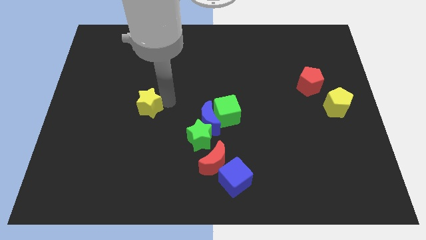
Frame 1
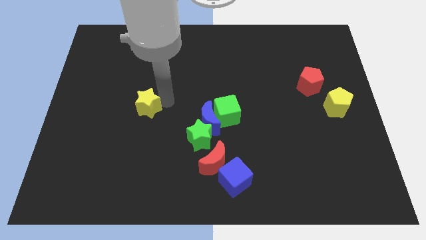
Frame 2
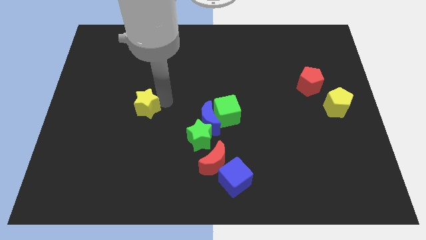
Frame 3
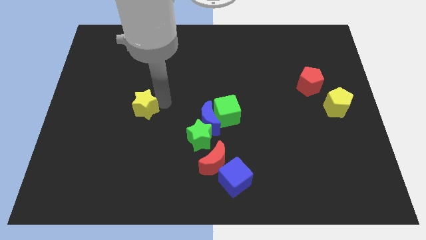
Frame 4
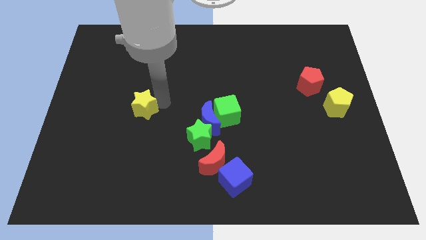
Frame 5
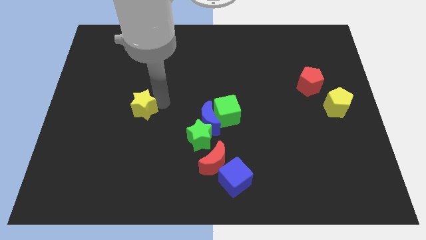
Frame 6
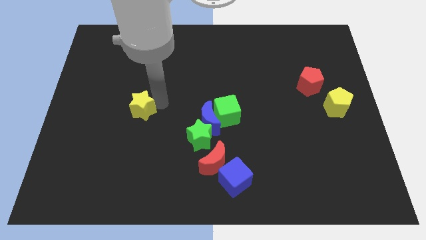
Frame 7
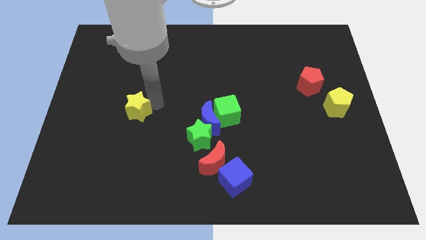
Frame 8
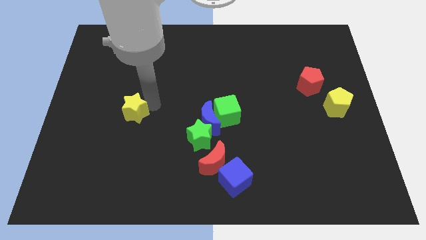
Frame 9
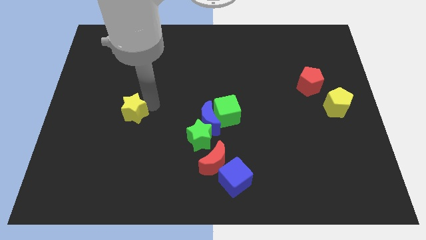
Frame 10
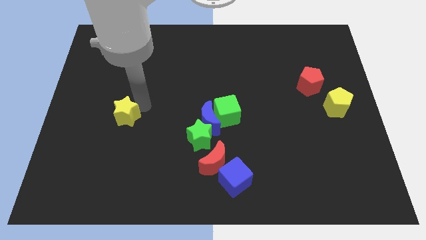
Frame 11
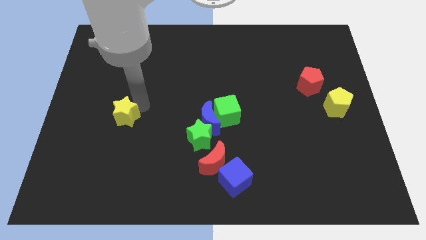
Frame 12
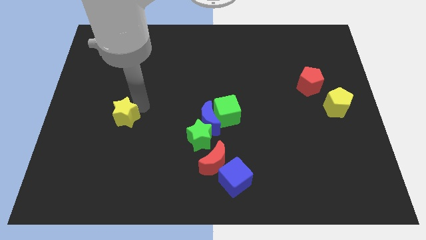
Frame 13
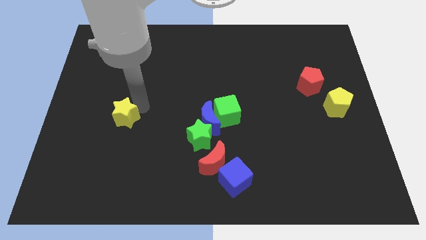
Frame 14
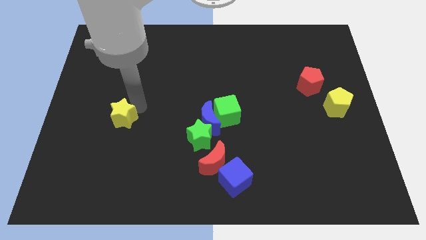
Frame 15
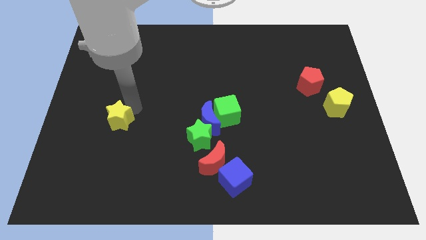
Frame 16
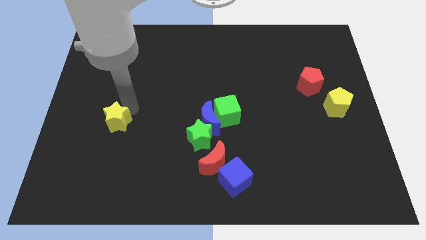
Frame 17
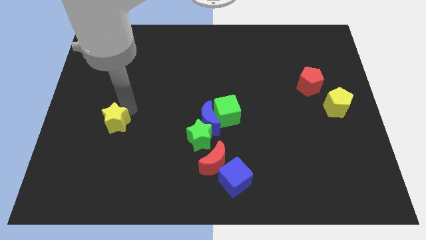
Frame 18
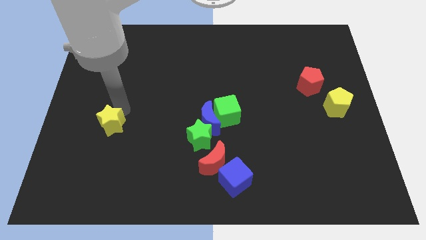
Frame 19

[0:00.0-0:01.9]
move yellow star towards left side of the board

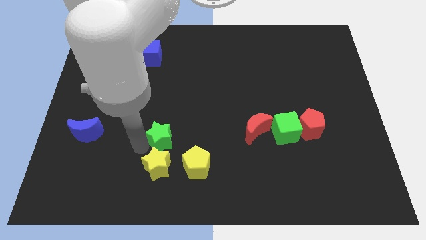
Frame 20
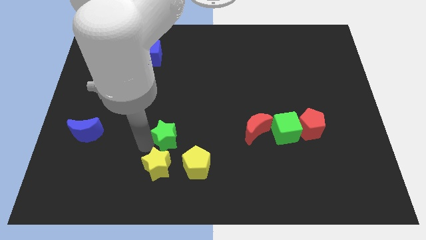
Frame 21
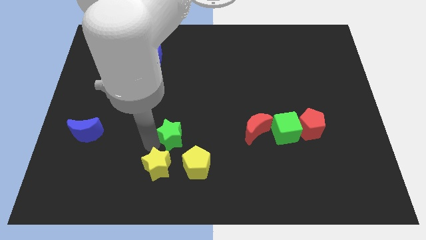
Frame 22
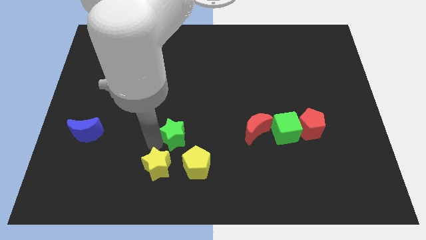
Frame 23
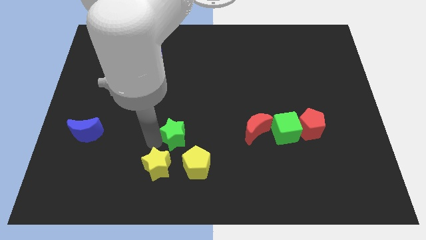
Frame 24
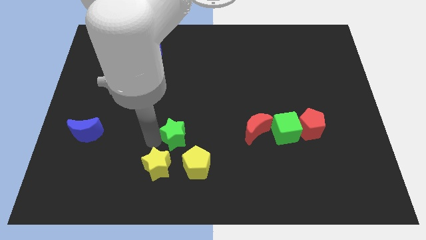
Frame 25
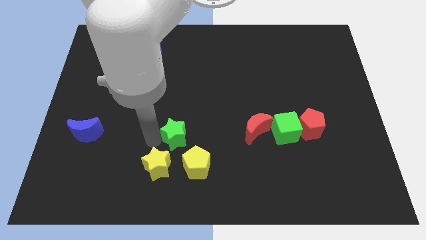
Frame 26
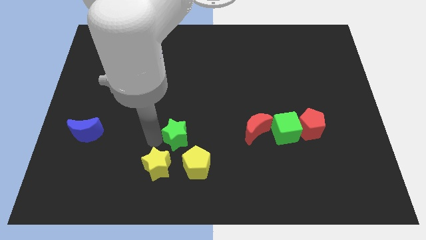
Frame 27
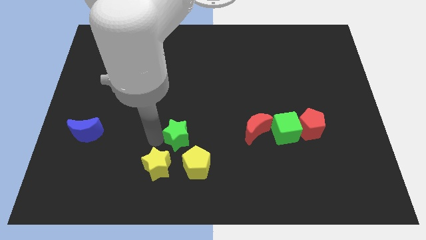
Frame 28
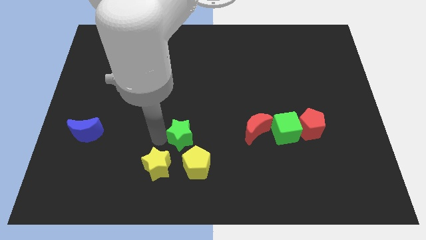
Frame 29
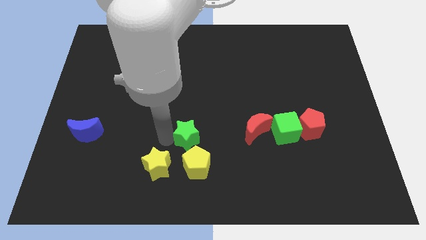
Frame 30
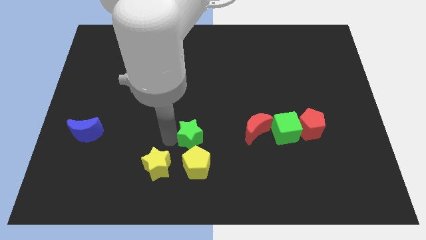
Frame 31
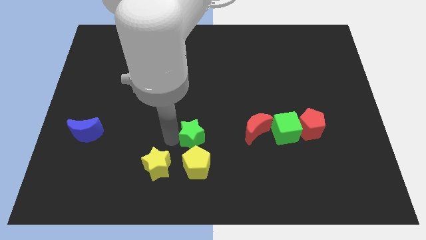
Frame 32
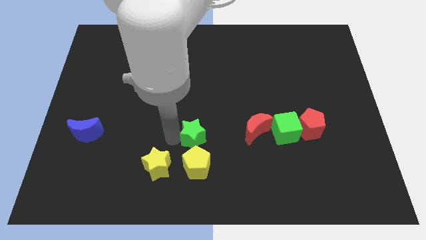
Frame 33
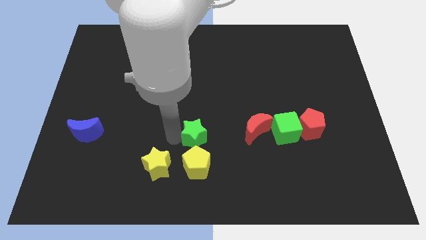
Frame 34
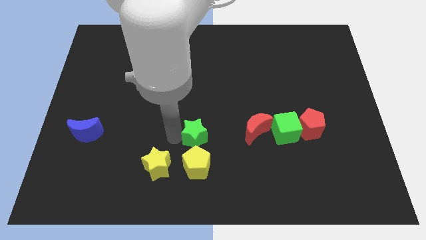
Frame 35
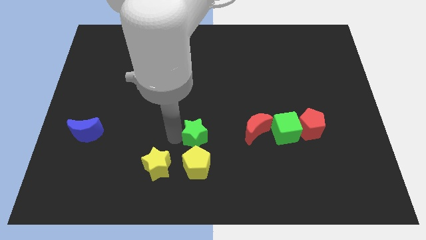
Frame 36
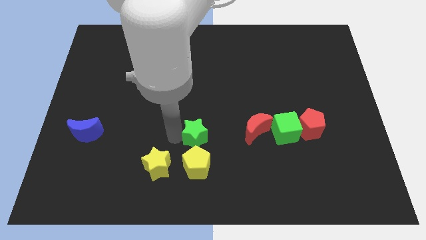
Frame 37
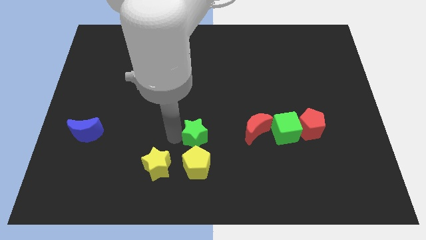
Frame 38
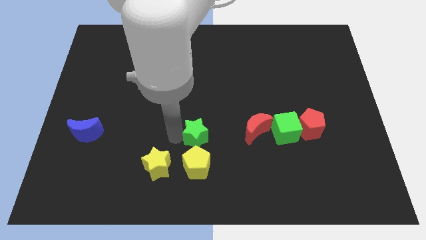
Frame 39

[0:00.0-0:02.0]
place the green star above yellow pentagon

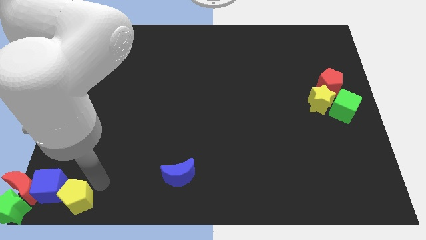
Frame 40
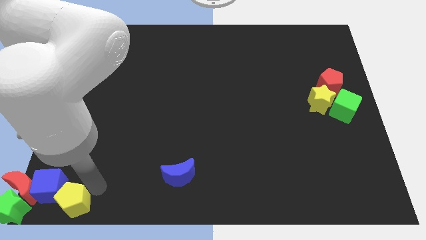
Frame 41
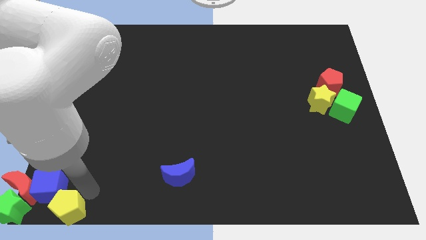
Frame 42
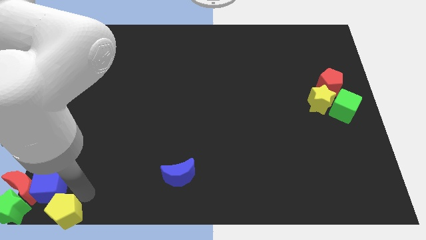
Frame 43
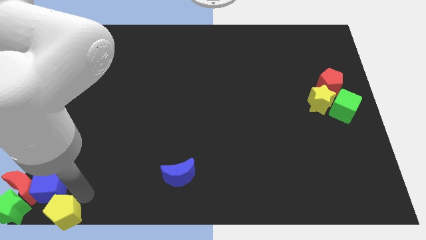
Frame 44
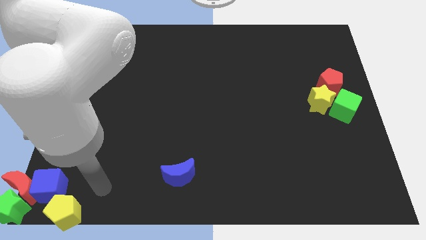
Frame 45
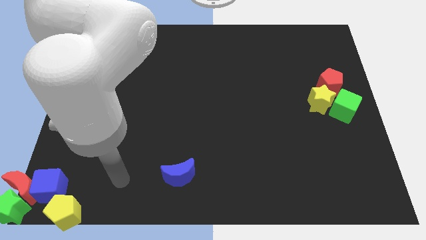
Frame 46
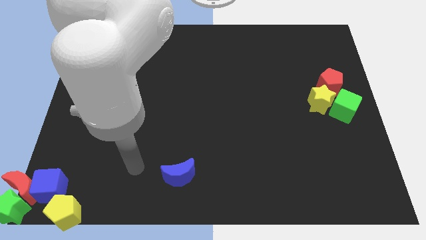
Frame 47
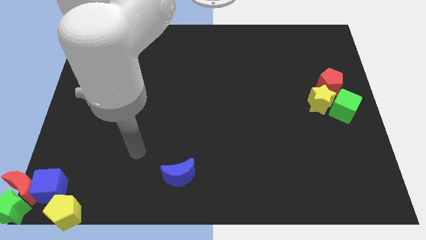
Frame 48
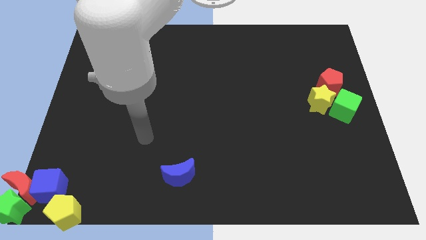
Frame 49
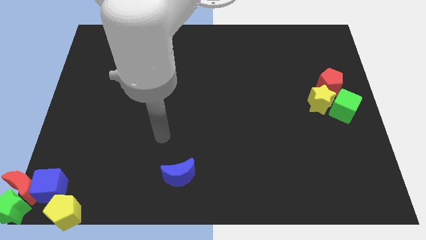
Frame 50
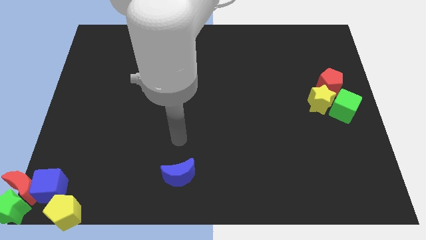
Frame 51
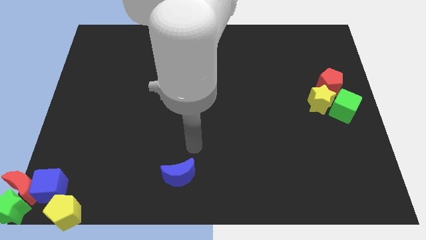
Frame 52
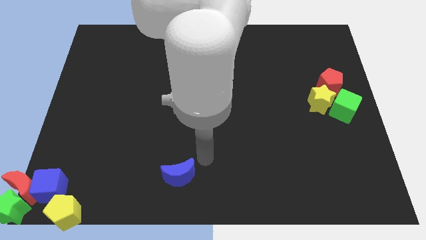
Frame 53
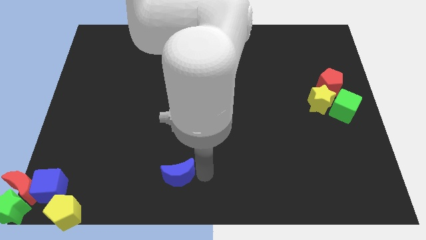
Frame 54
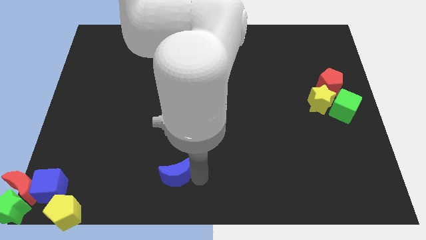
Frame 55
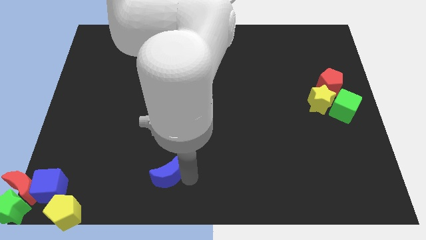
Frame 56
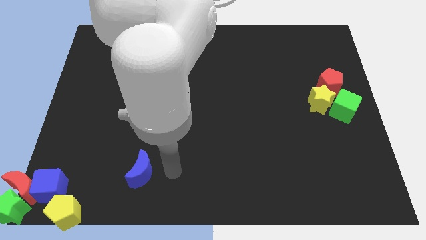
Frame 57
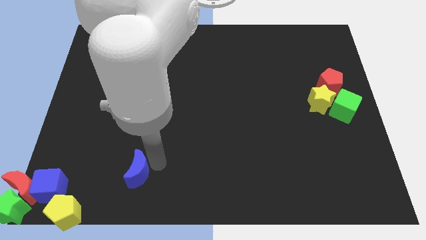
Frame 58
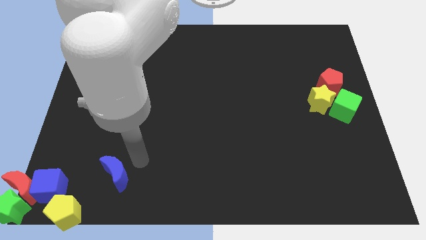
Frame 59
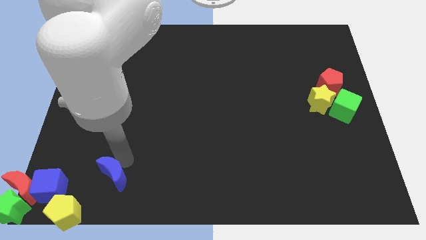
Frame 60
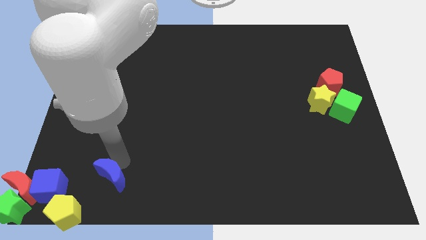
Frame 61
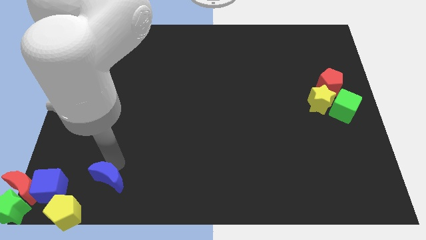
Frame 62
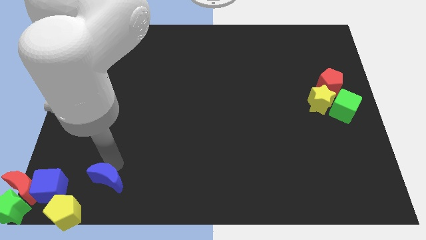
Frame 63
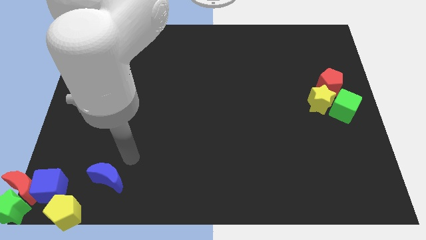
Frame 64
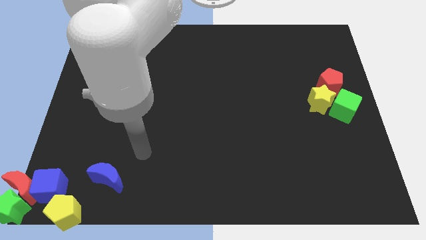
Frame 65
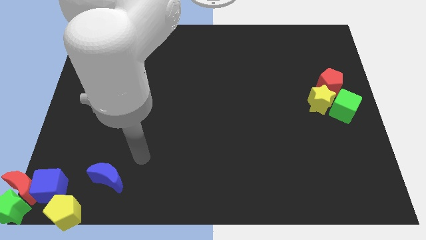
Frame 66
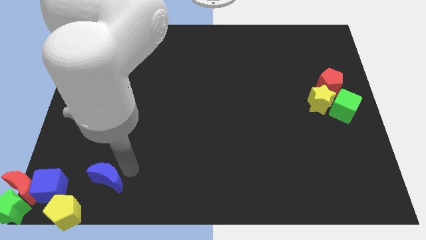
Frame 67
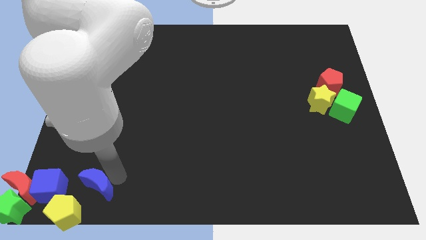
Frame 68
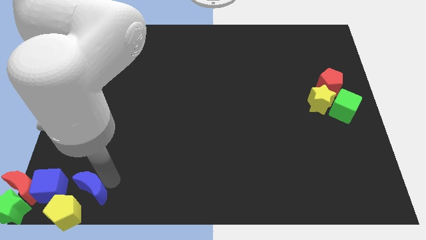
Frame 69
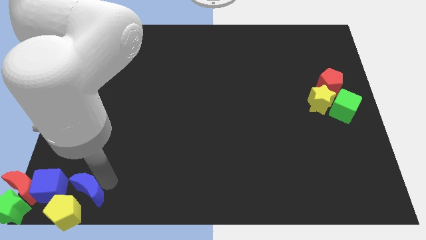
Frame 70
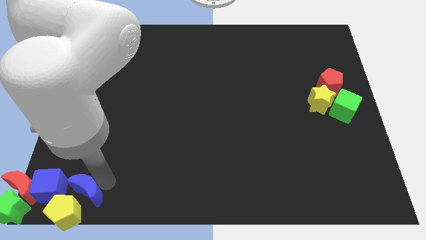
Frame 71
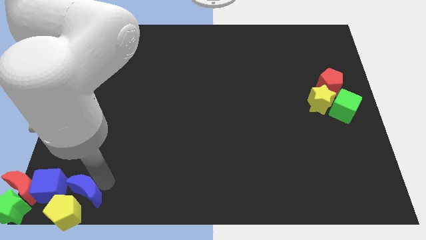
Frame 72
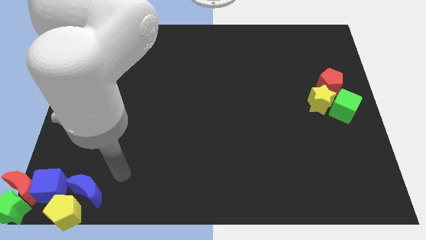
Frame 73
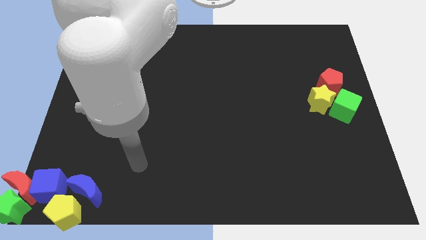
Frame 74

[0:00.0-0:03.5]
place the blue moon to the right of the blue cube

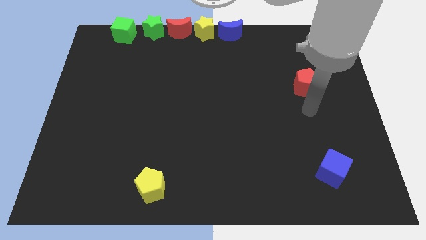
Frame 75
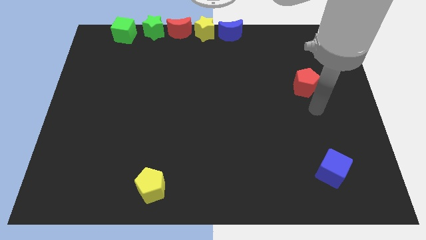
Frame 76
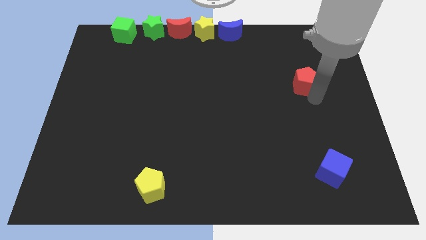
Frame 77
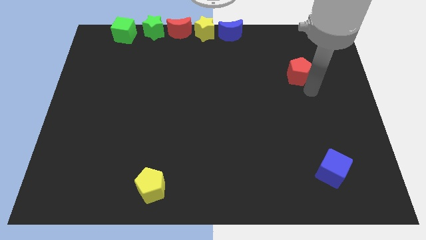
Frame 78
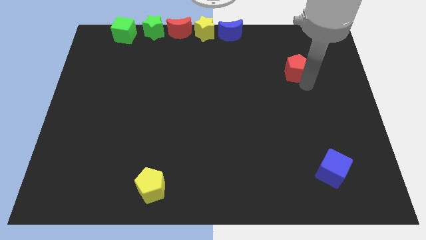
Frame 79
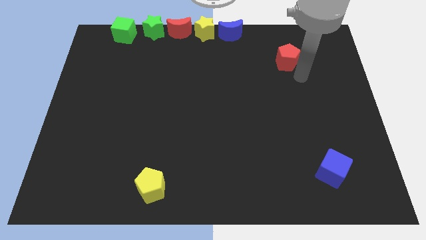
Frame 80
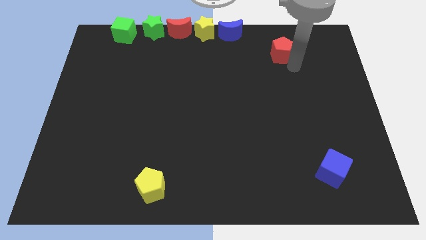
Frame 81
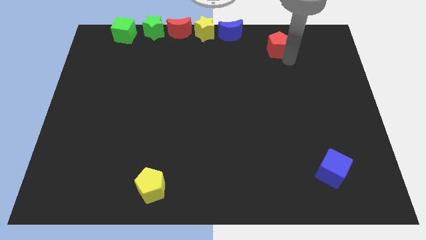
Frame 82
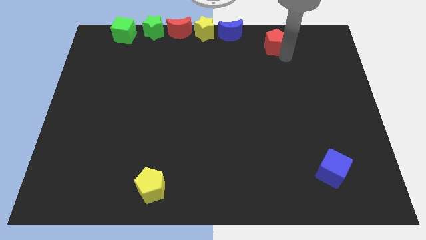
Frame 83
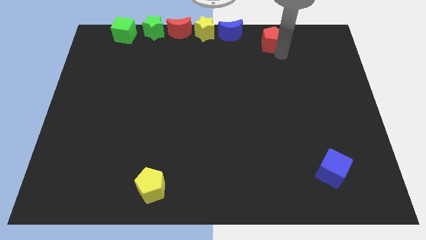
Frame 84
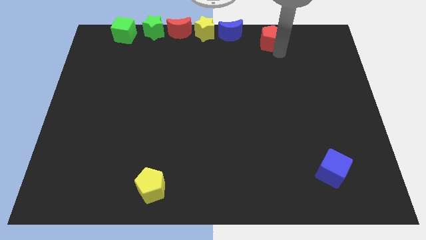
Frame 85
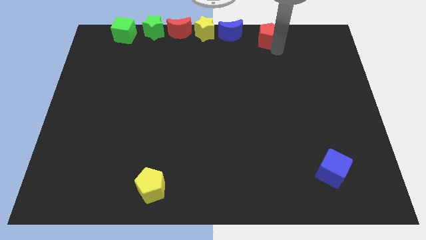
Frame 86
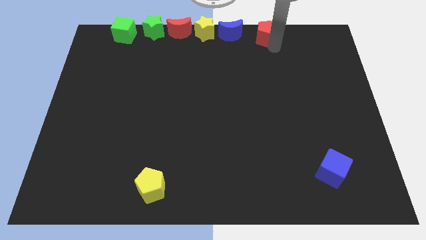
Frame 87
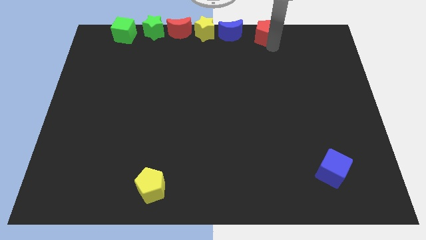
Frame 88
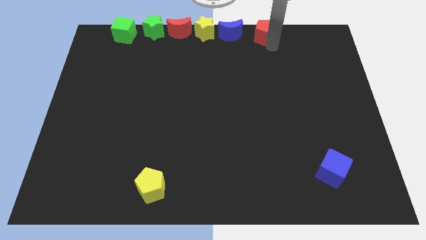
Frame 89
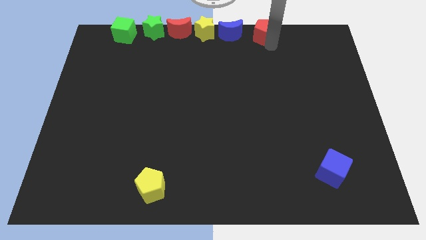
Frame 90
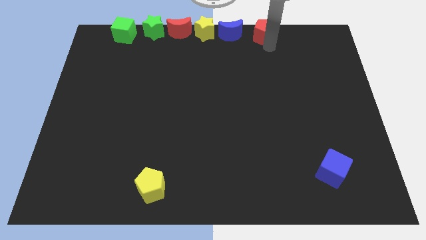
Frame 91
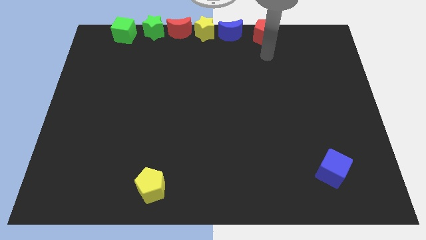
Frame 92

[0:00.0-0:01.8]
place the red pentagon to the right side of the blue crescent
